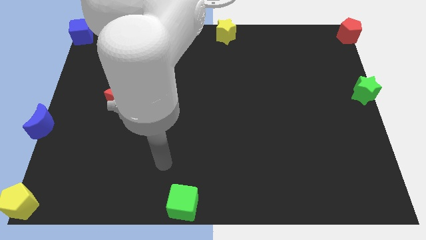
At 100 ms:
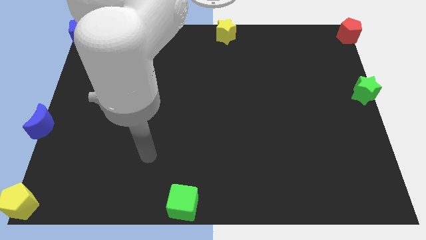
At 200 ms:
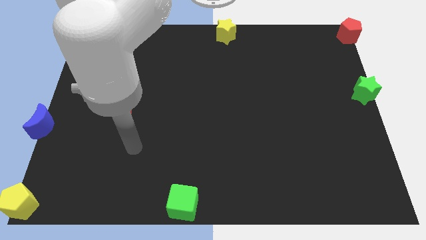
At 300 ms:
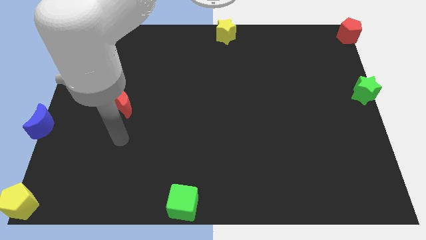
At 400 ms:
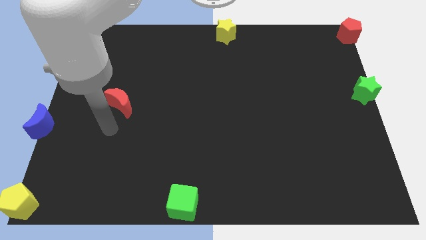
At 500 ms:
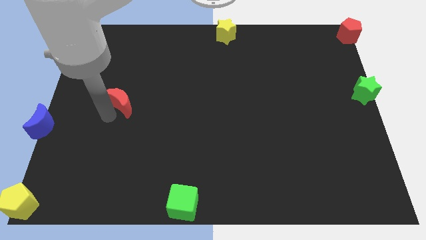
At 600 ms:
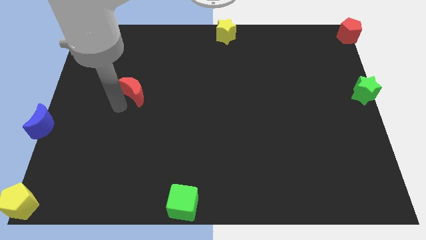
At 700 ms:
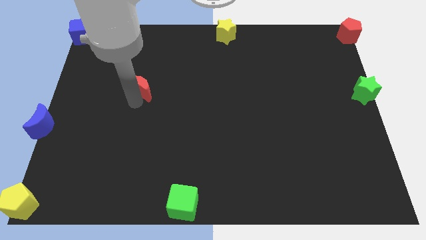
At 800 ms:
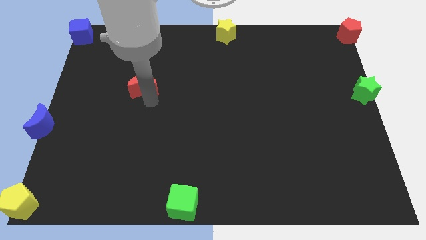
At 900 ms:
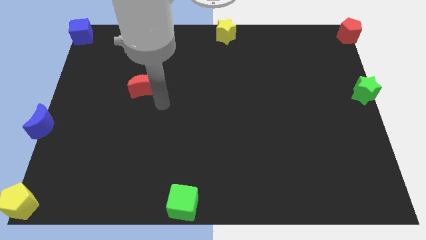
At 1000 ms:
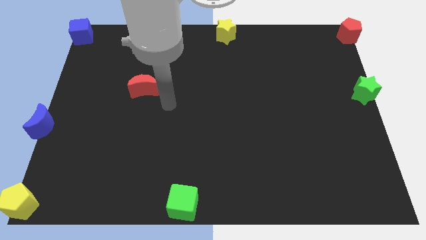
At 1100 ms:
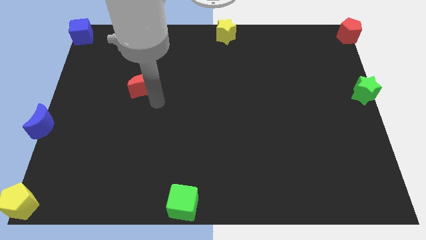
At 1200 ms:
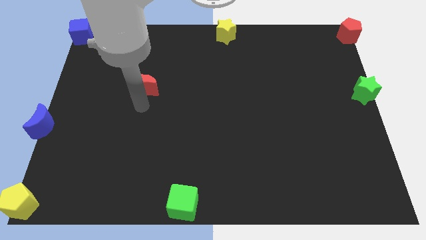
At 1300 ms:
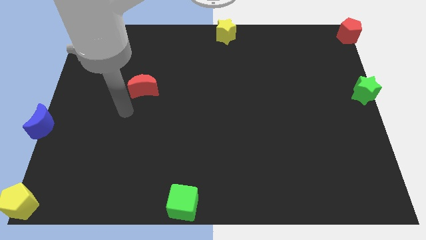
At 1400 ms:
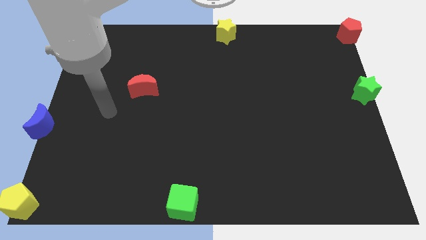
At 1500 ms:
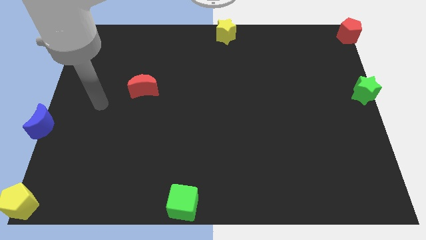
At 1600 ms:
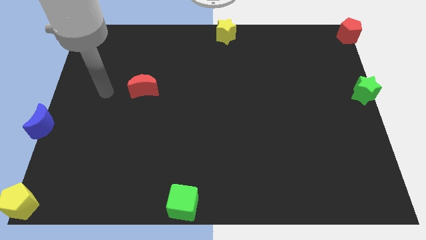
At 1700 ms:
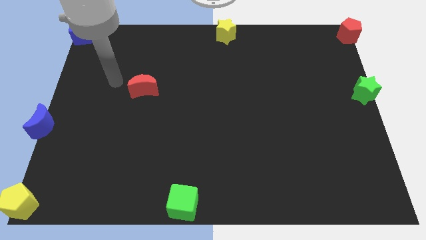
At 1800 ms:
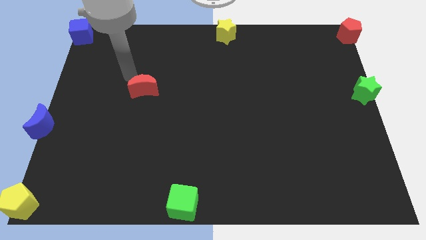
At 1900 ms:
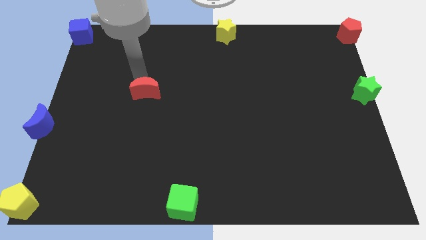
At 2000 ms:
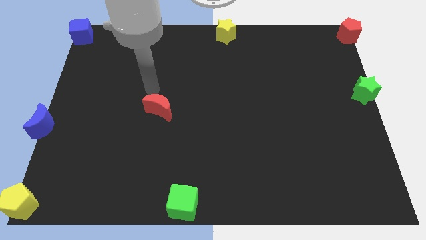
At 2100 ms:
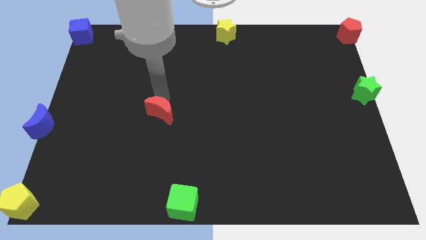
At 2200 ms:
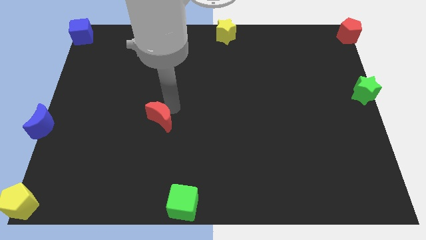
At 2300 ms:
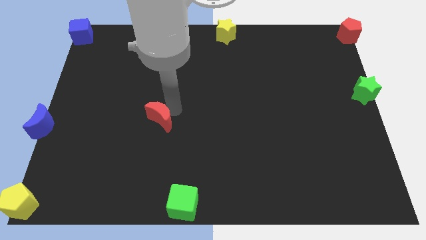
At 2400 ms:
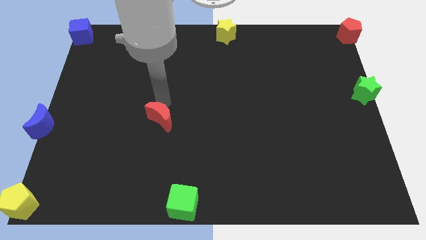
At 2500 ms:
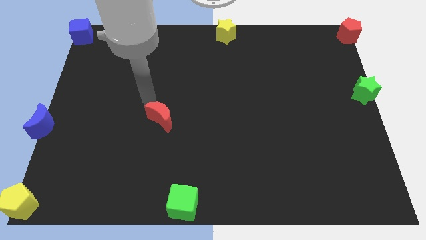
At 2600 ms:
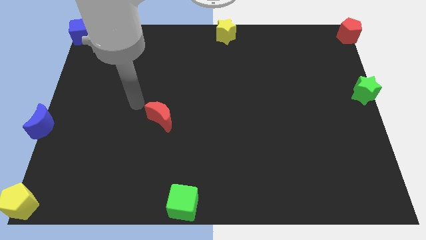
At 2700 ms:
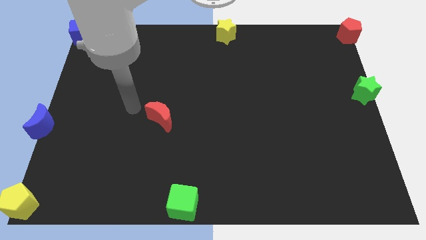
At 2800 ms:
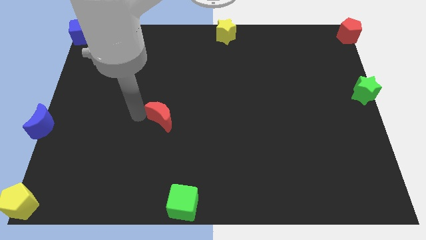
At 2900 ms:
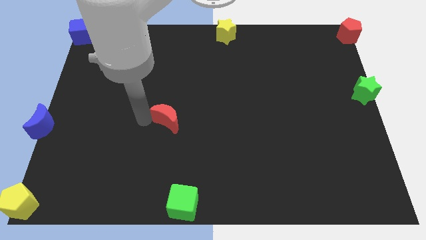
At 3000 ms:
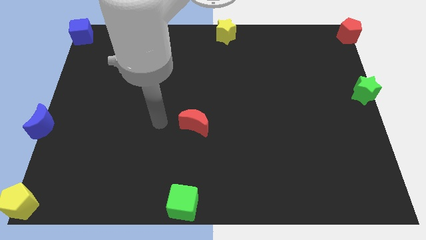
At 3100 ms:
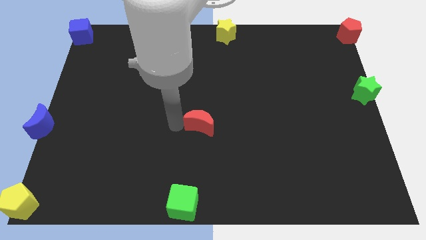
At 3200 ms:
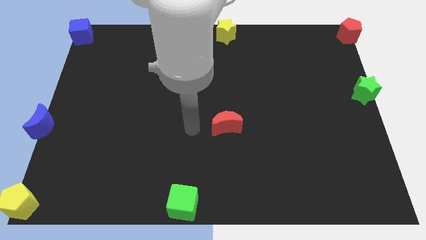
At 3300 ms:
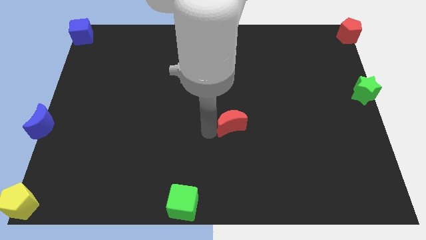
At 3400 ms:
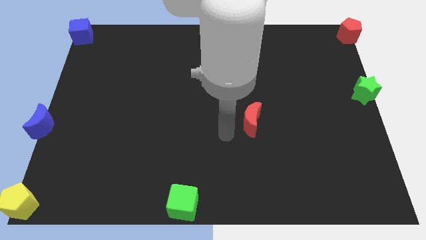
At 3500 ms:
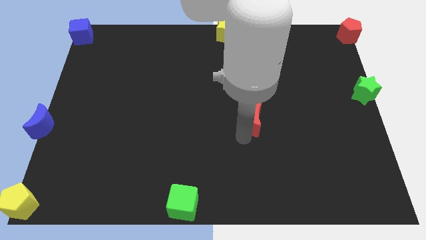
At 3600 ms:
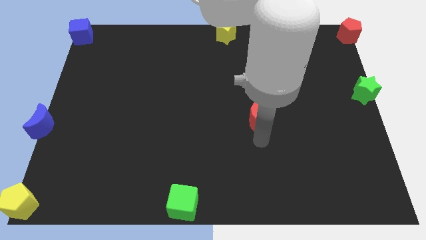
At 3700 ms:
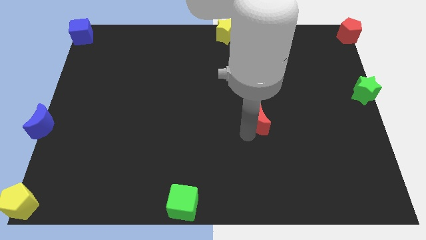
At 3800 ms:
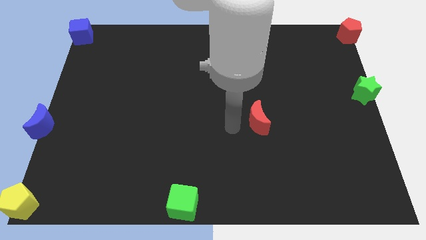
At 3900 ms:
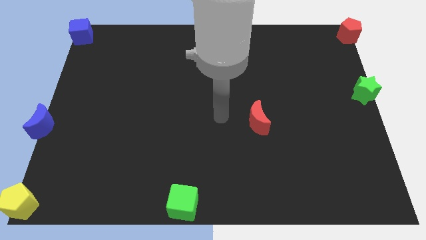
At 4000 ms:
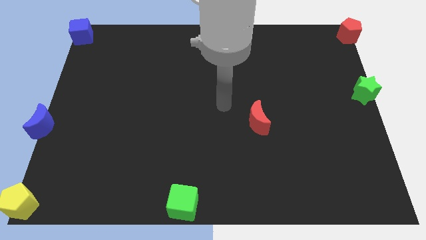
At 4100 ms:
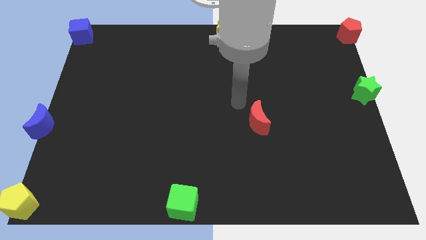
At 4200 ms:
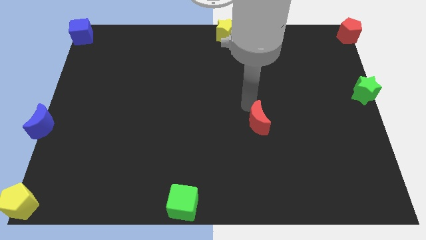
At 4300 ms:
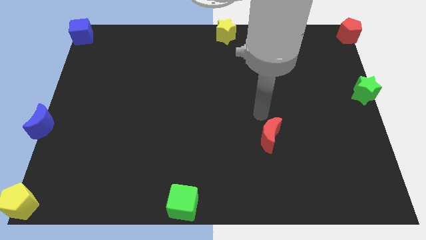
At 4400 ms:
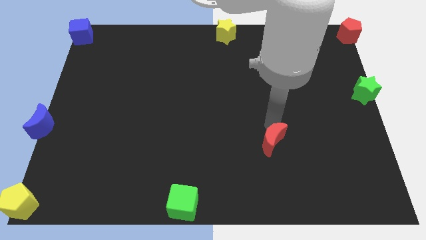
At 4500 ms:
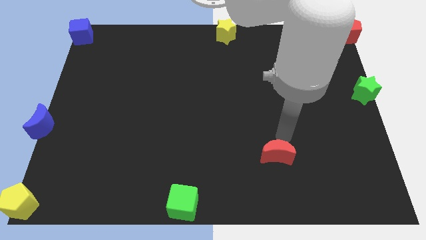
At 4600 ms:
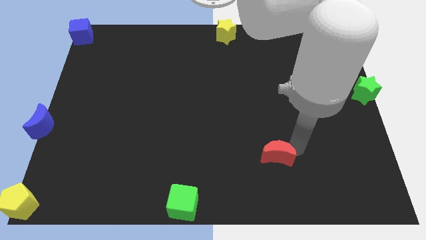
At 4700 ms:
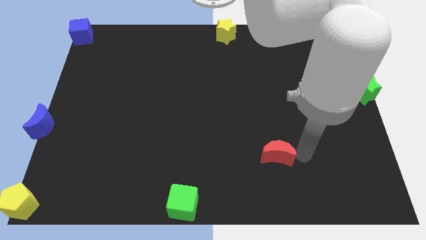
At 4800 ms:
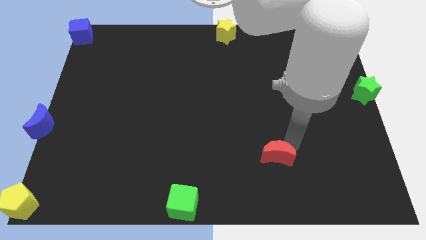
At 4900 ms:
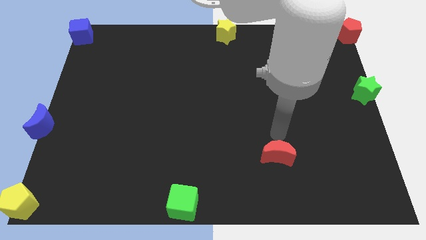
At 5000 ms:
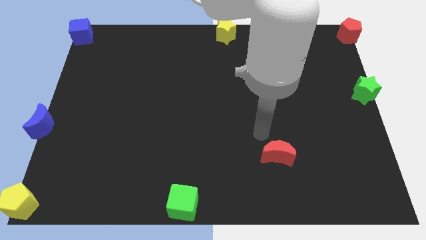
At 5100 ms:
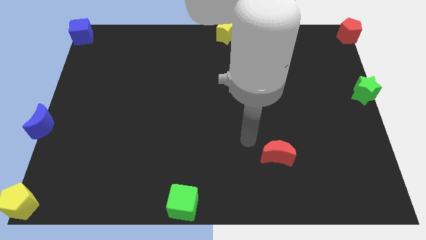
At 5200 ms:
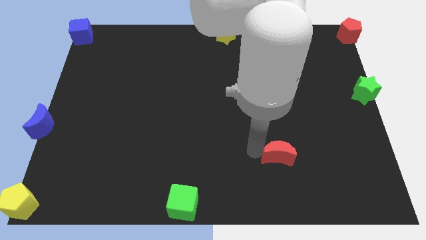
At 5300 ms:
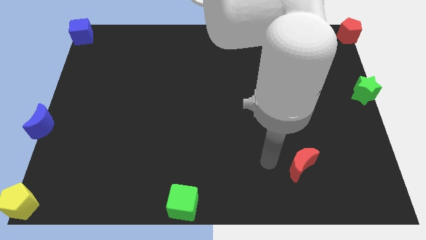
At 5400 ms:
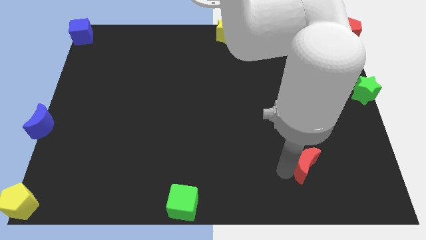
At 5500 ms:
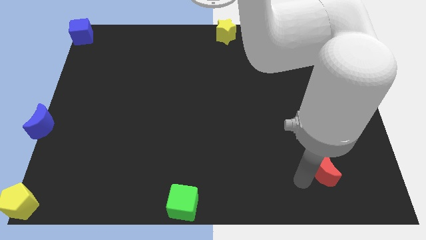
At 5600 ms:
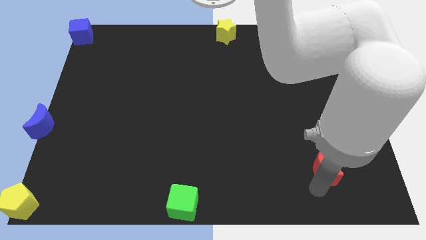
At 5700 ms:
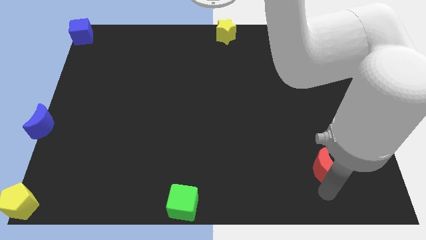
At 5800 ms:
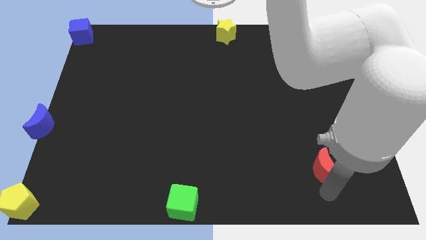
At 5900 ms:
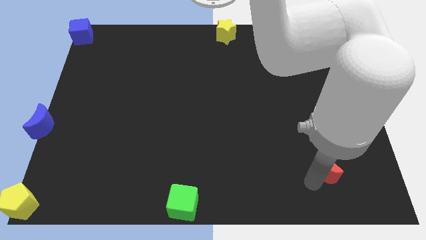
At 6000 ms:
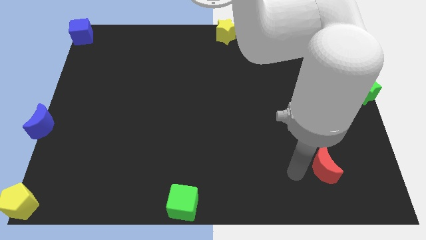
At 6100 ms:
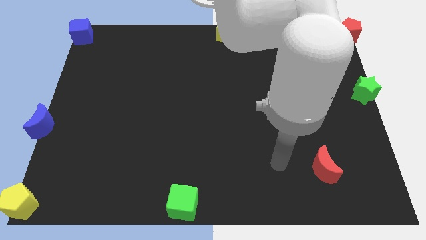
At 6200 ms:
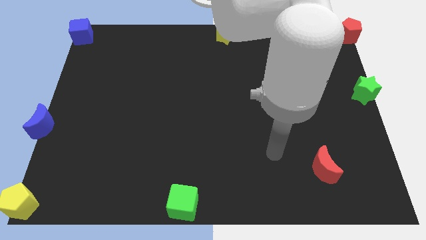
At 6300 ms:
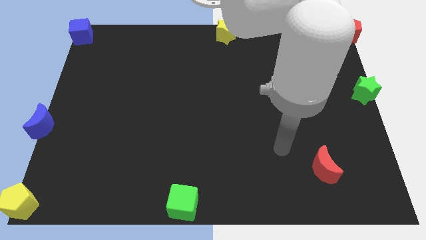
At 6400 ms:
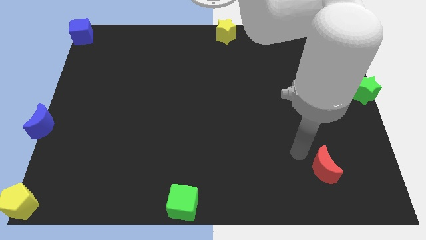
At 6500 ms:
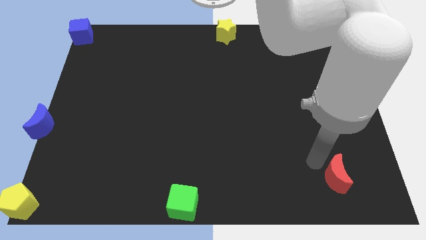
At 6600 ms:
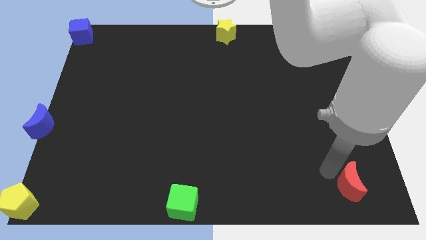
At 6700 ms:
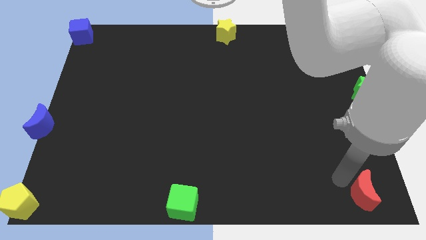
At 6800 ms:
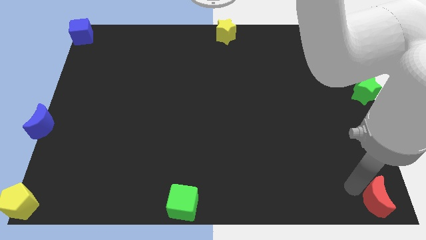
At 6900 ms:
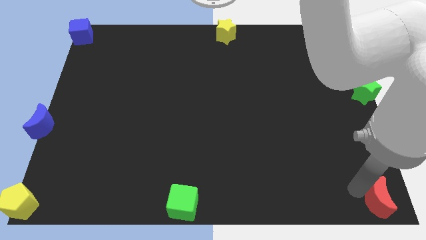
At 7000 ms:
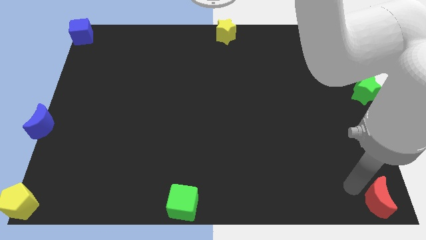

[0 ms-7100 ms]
place the red crescent at the bottom right corner

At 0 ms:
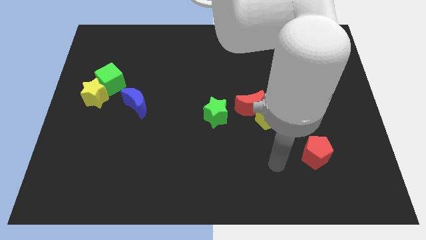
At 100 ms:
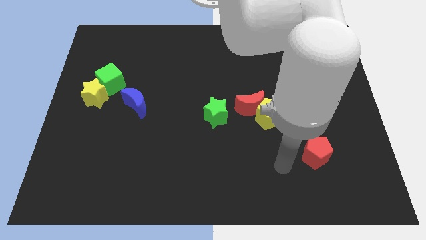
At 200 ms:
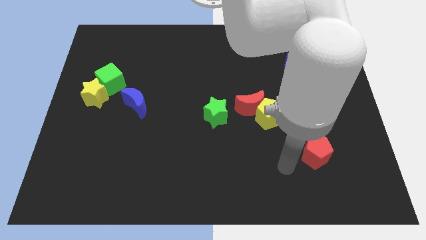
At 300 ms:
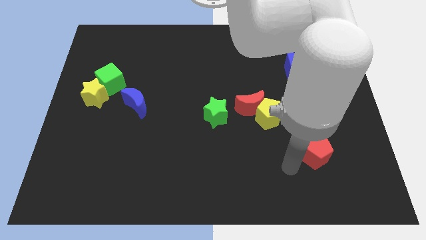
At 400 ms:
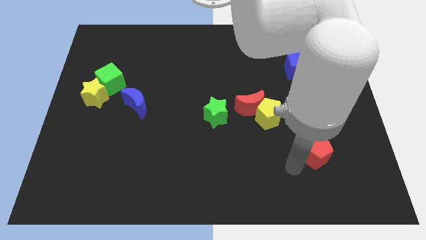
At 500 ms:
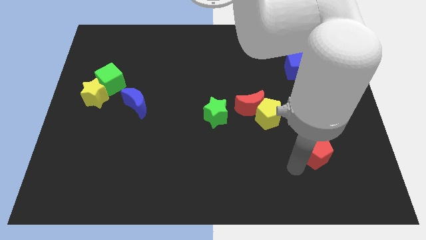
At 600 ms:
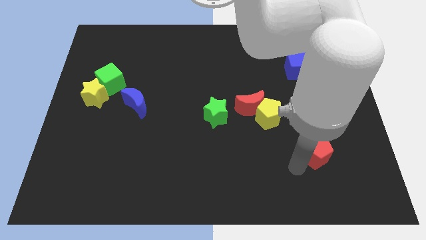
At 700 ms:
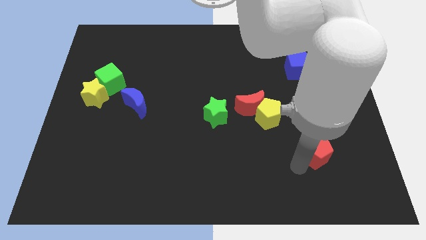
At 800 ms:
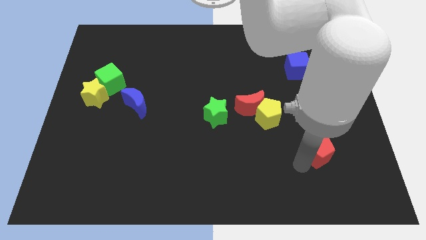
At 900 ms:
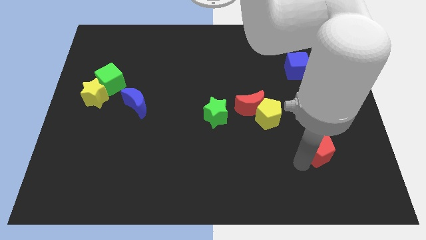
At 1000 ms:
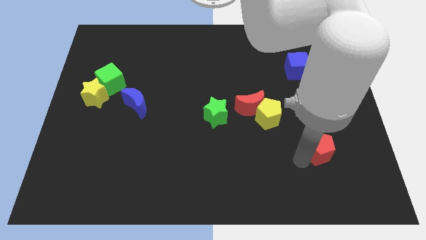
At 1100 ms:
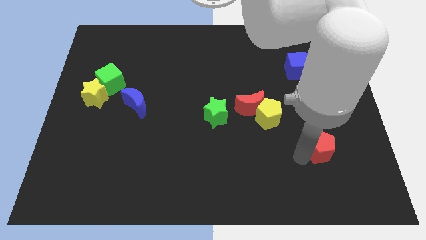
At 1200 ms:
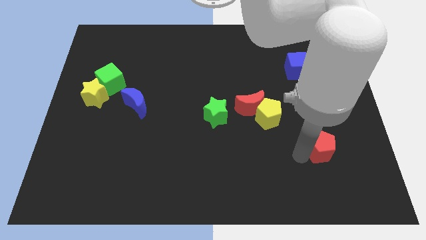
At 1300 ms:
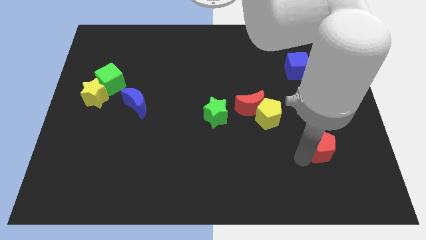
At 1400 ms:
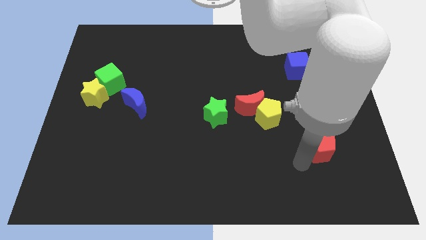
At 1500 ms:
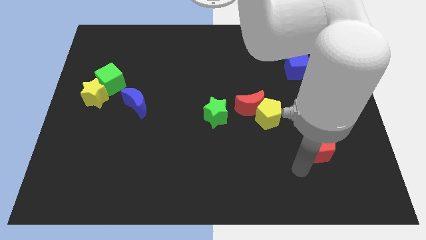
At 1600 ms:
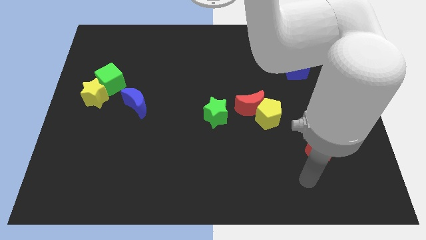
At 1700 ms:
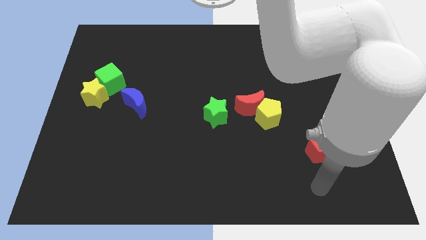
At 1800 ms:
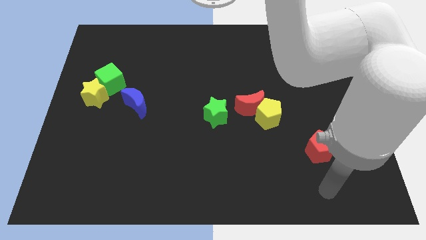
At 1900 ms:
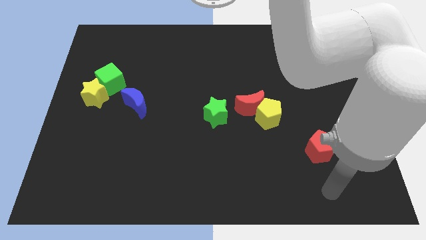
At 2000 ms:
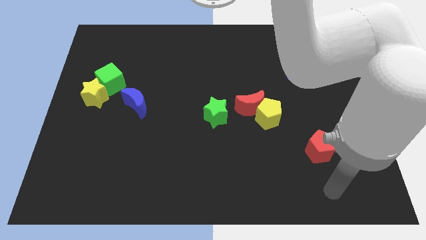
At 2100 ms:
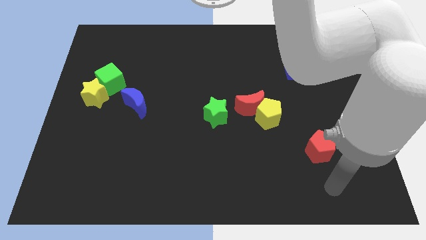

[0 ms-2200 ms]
move the red pentagon to right of yellow pentagon
